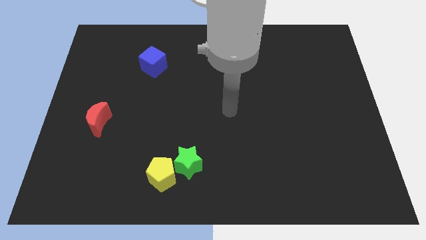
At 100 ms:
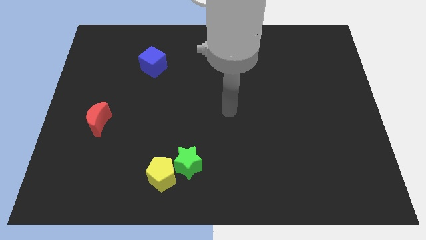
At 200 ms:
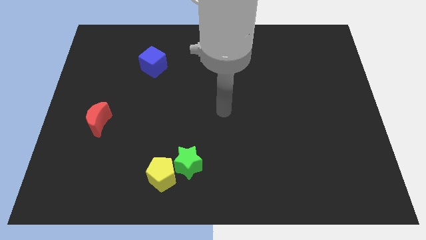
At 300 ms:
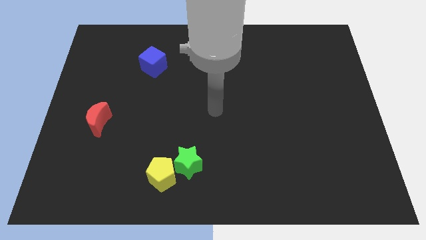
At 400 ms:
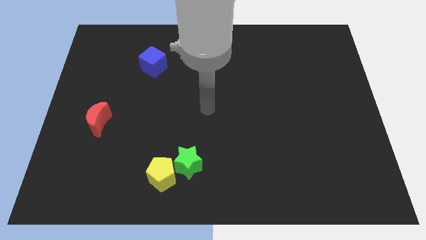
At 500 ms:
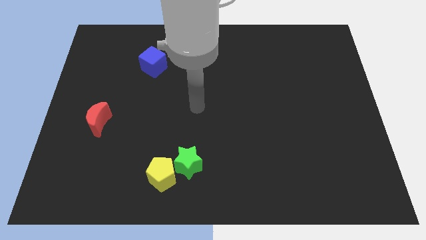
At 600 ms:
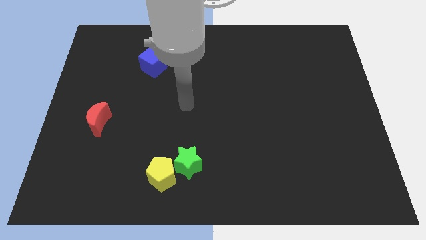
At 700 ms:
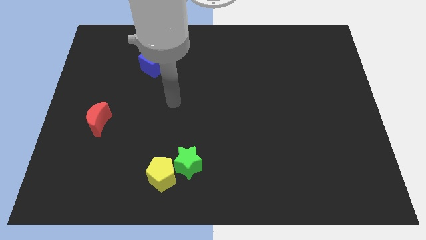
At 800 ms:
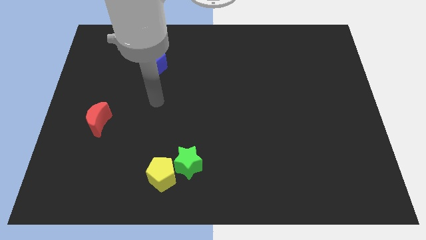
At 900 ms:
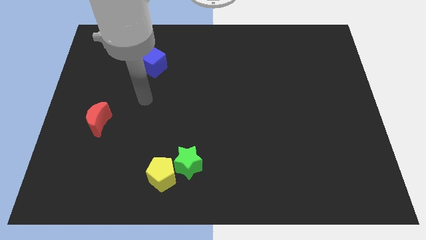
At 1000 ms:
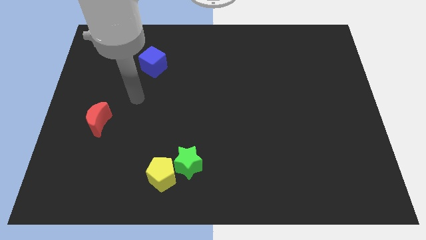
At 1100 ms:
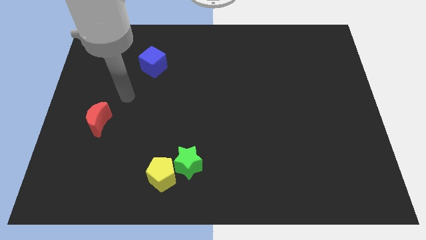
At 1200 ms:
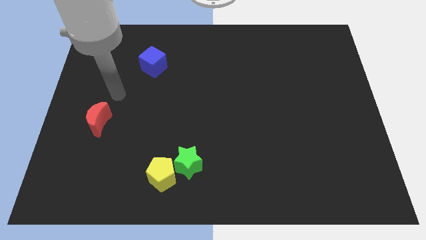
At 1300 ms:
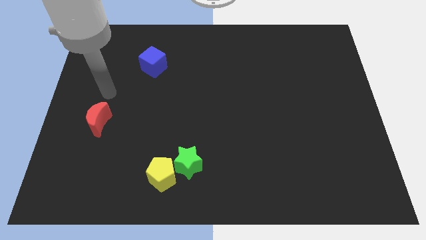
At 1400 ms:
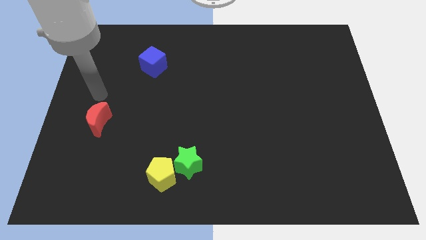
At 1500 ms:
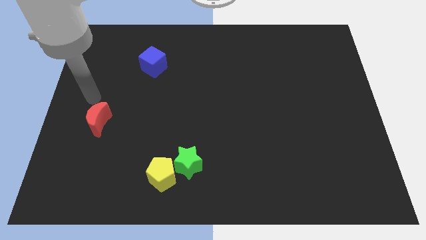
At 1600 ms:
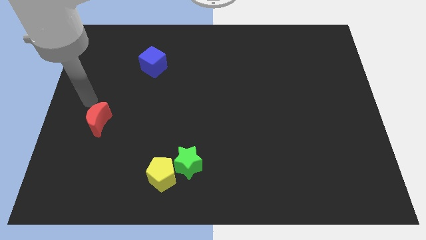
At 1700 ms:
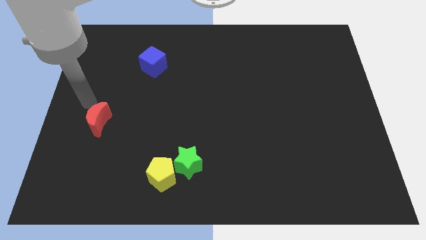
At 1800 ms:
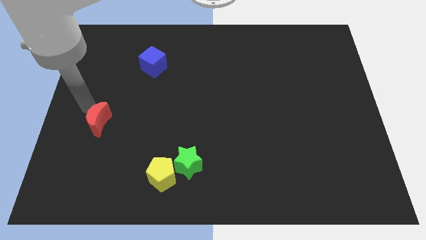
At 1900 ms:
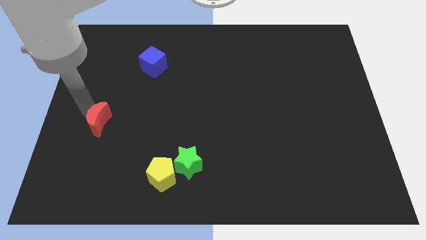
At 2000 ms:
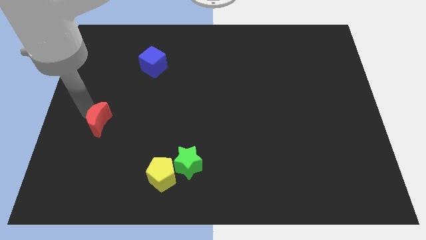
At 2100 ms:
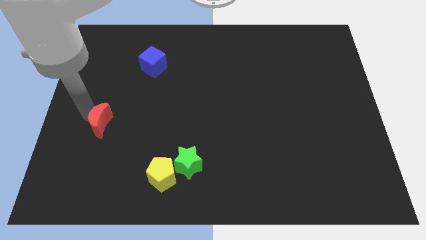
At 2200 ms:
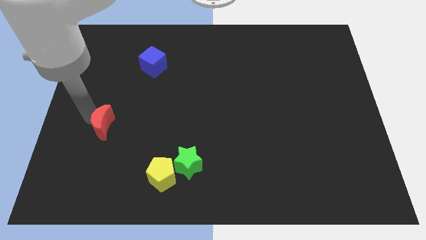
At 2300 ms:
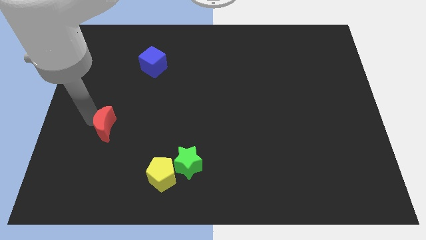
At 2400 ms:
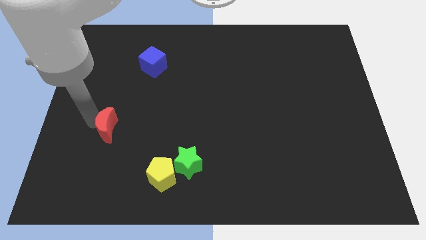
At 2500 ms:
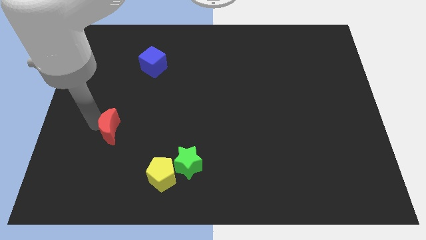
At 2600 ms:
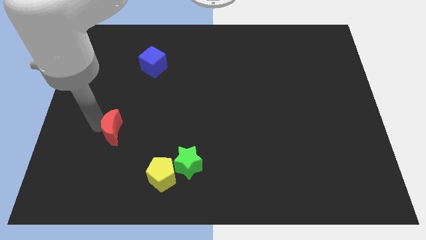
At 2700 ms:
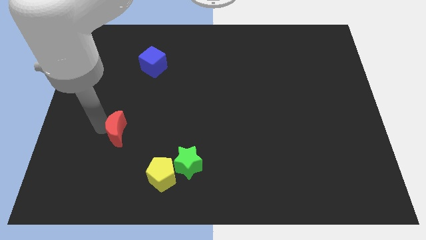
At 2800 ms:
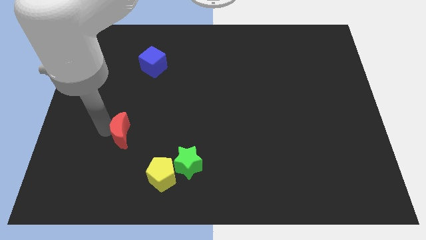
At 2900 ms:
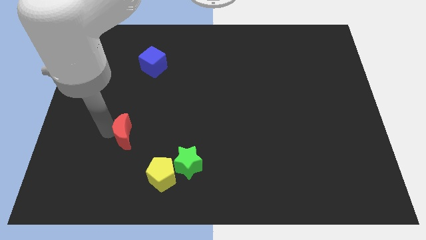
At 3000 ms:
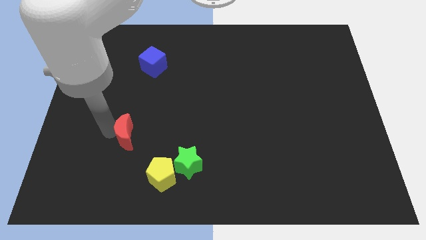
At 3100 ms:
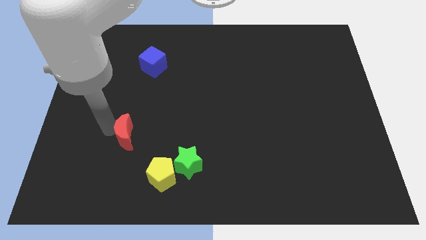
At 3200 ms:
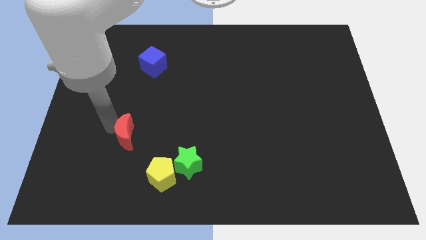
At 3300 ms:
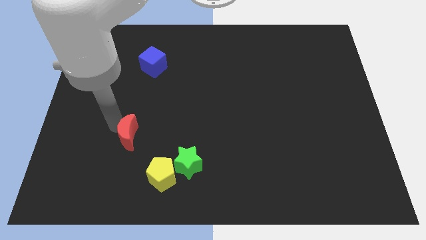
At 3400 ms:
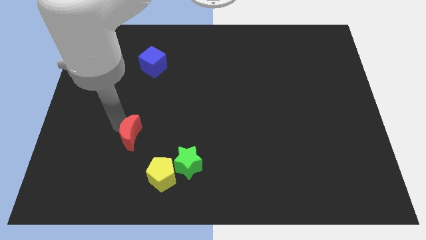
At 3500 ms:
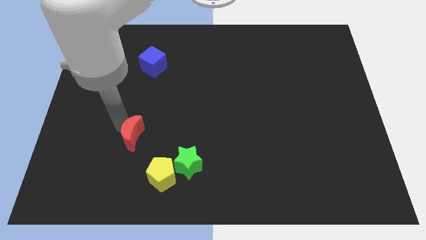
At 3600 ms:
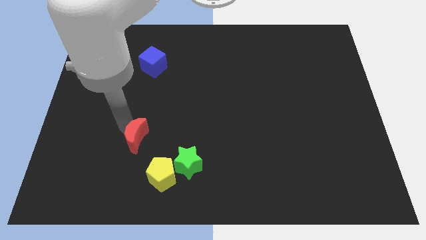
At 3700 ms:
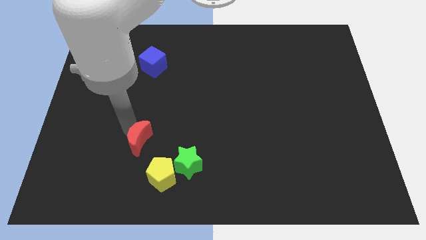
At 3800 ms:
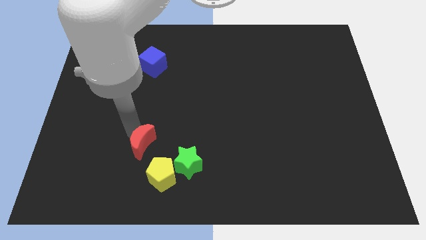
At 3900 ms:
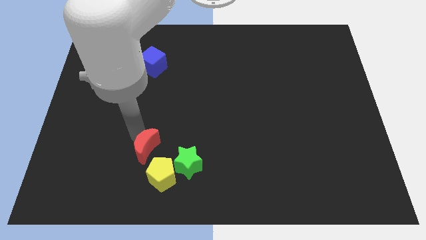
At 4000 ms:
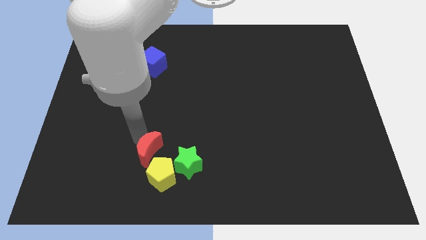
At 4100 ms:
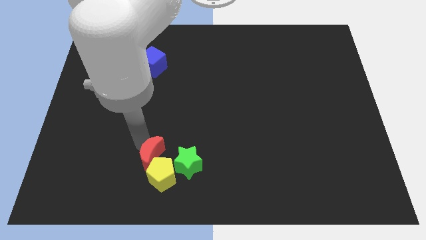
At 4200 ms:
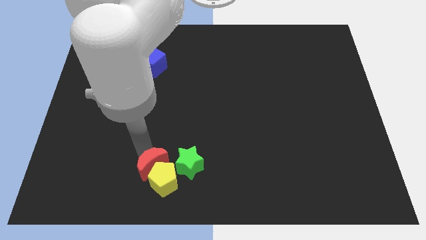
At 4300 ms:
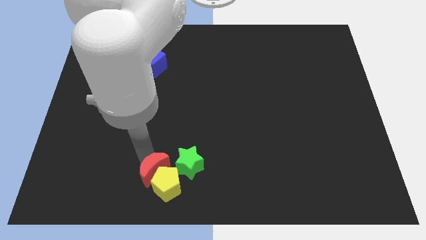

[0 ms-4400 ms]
put the red block towards the yellow pentagon

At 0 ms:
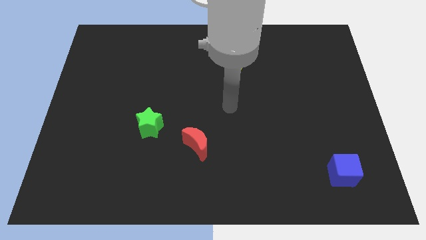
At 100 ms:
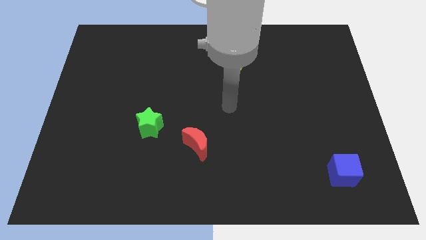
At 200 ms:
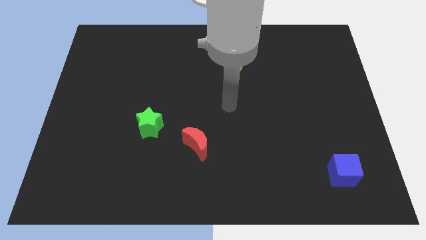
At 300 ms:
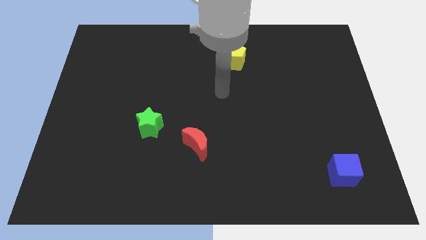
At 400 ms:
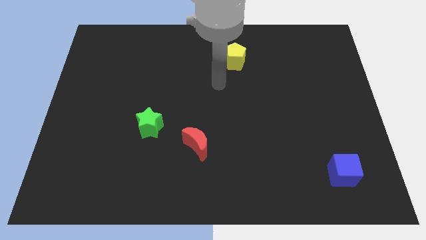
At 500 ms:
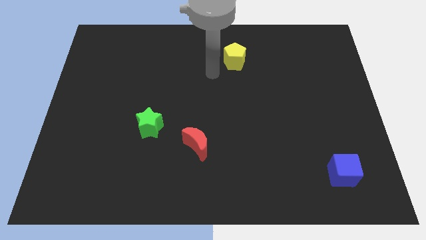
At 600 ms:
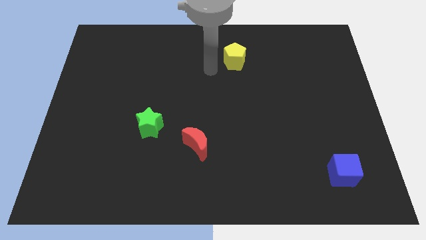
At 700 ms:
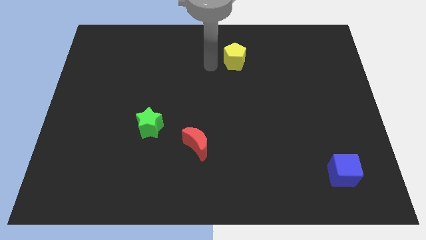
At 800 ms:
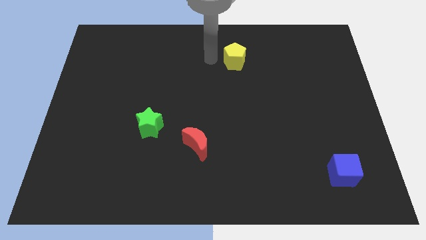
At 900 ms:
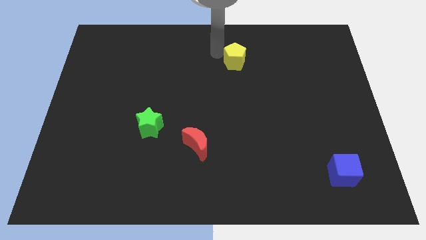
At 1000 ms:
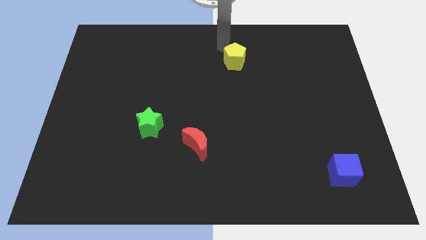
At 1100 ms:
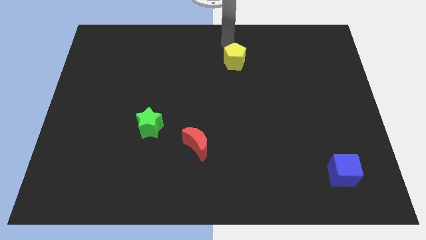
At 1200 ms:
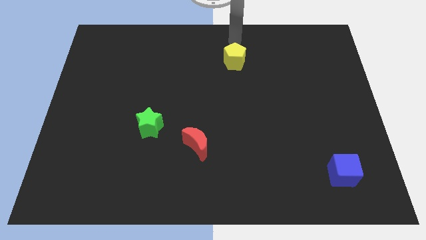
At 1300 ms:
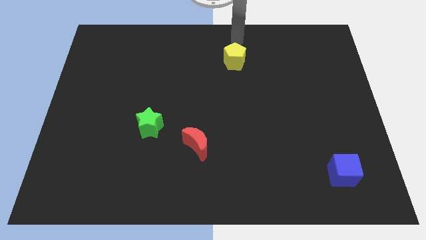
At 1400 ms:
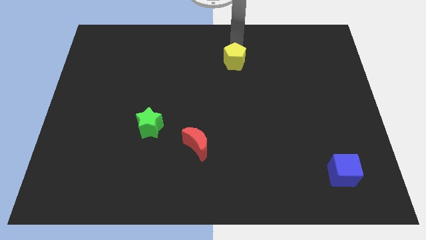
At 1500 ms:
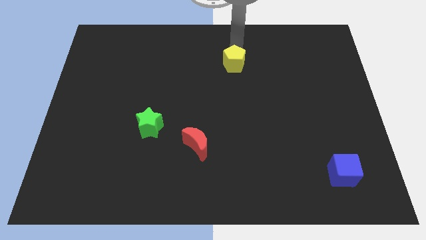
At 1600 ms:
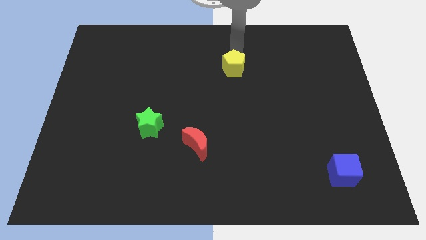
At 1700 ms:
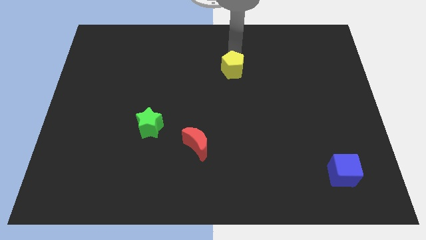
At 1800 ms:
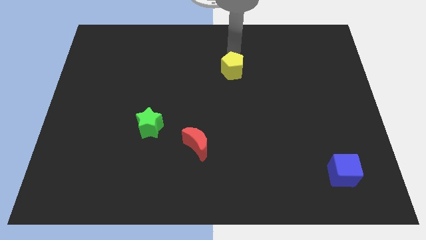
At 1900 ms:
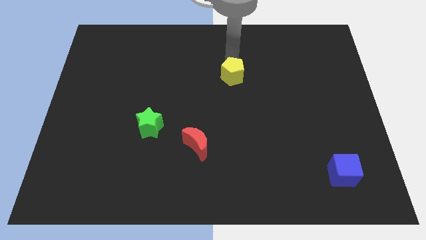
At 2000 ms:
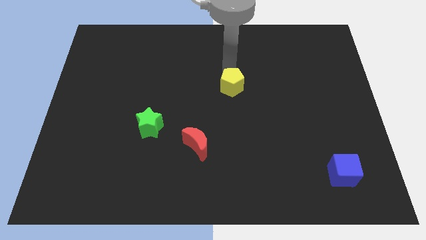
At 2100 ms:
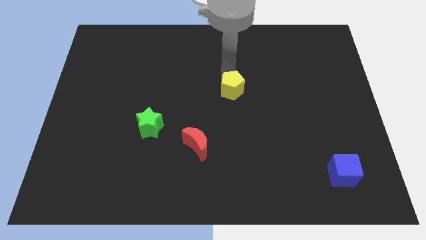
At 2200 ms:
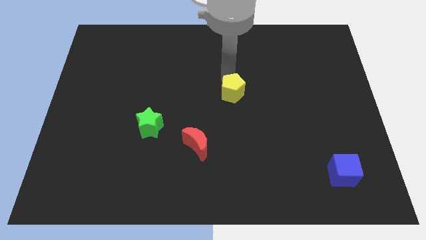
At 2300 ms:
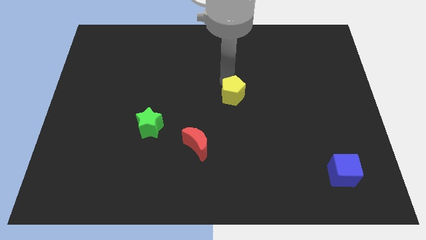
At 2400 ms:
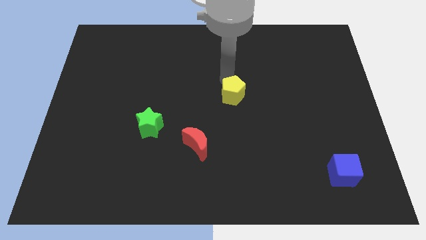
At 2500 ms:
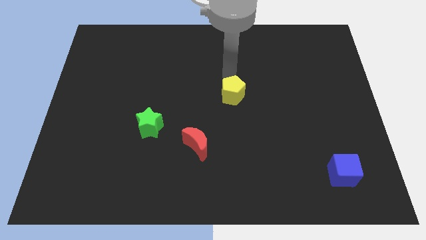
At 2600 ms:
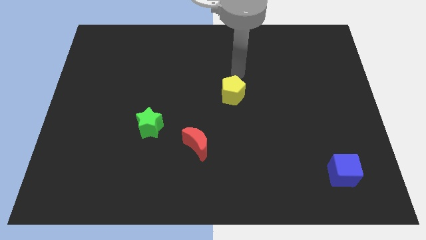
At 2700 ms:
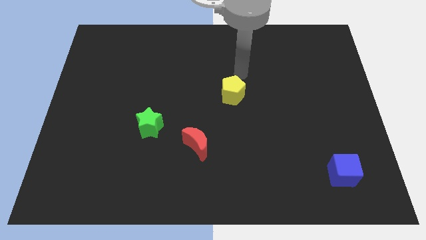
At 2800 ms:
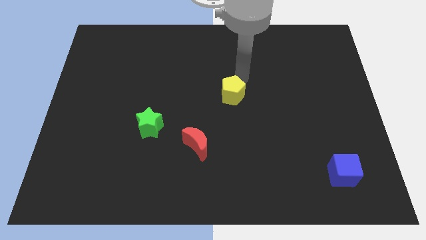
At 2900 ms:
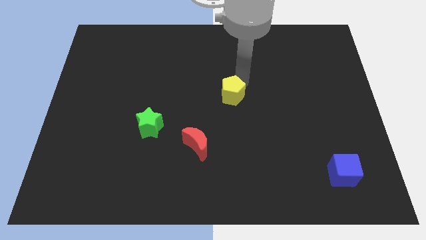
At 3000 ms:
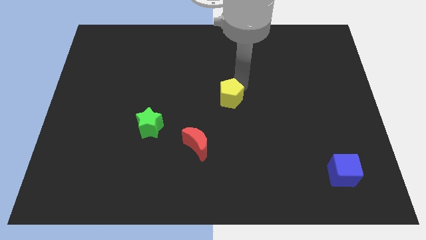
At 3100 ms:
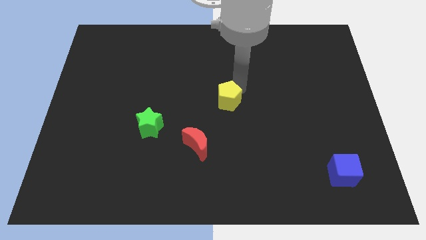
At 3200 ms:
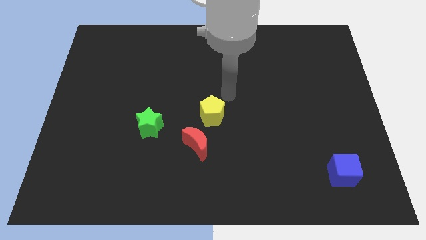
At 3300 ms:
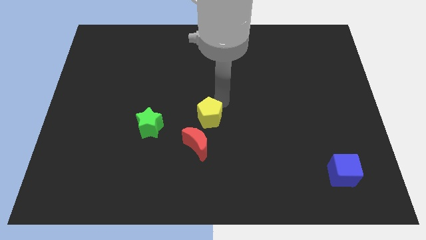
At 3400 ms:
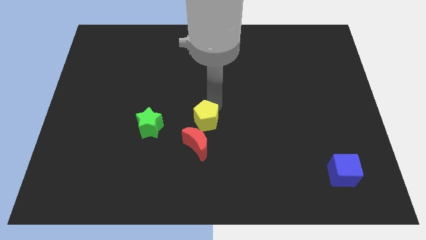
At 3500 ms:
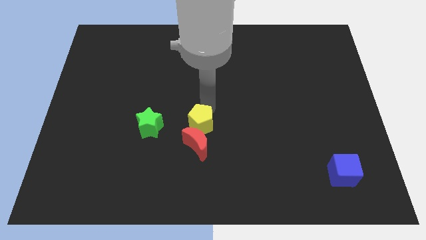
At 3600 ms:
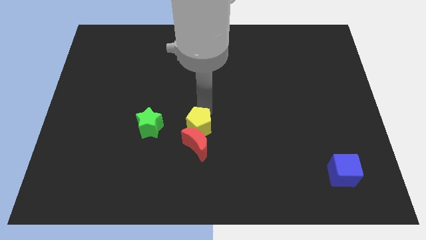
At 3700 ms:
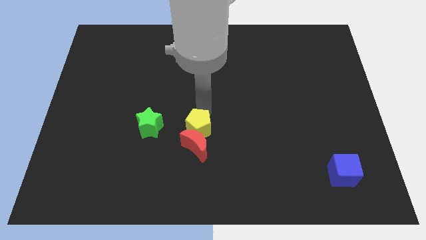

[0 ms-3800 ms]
put the pentagon next to the red block
